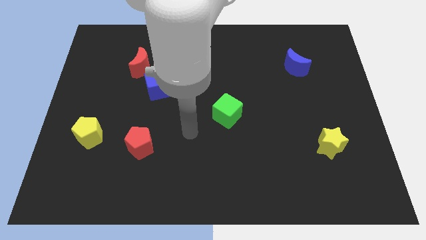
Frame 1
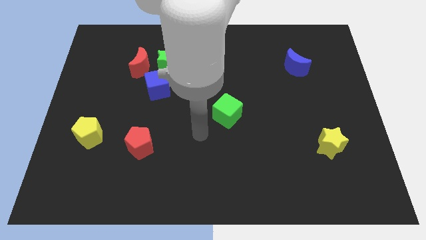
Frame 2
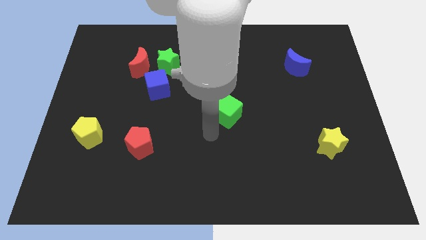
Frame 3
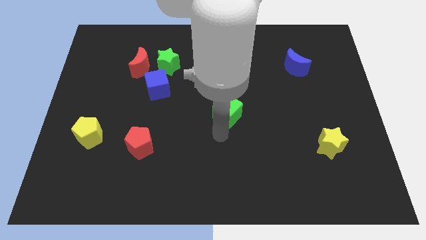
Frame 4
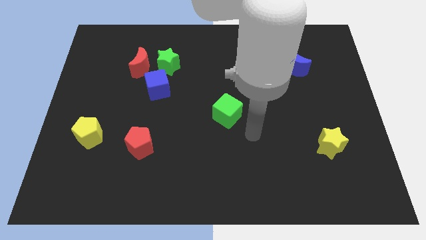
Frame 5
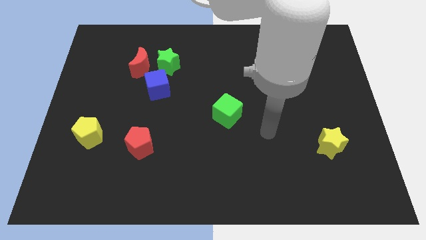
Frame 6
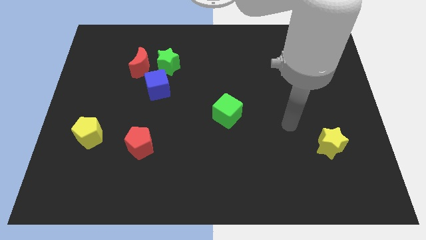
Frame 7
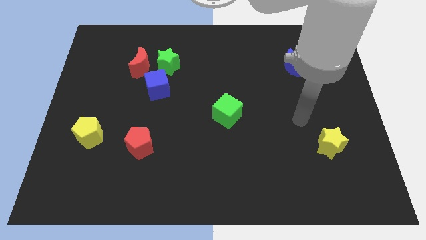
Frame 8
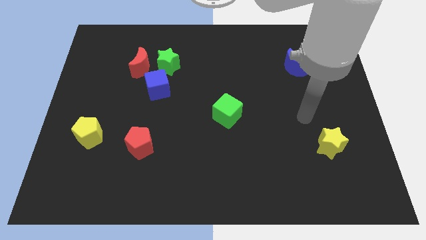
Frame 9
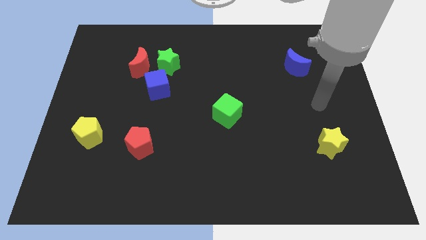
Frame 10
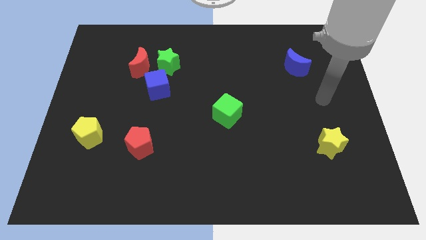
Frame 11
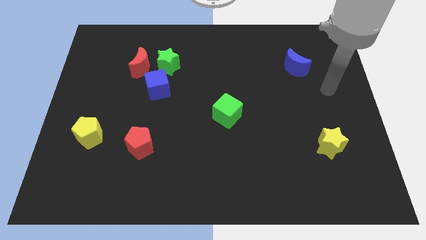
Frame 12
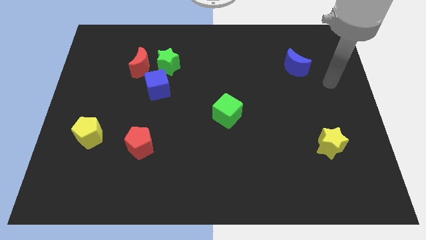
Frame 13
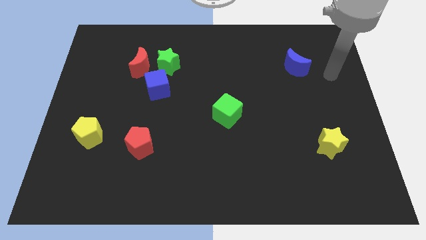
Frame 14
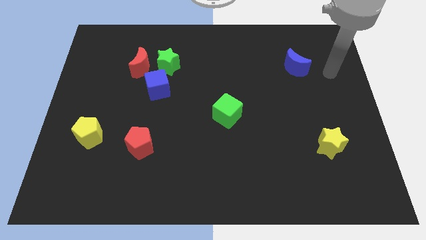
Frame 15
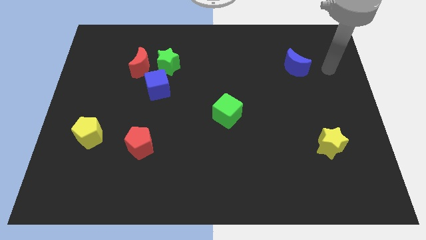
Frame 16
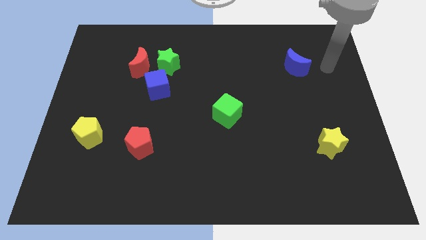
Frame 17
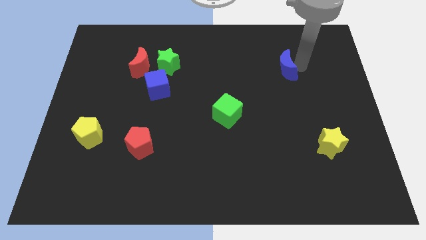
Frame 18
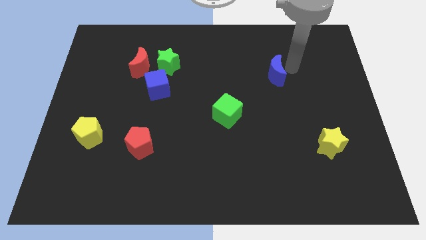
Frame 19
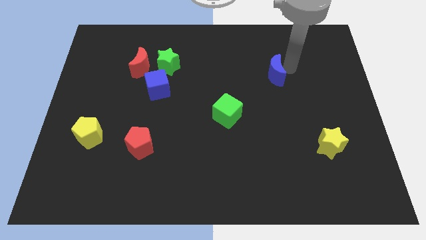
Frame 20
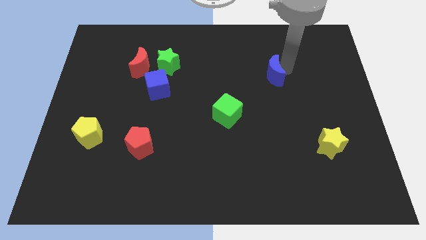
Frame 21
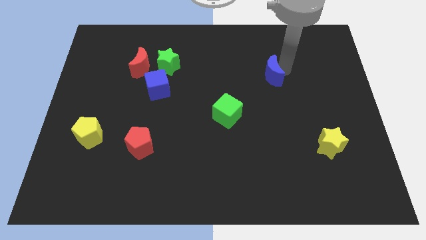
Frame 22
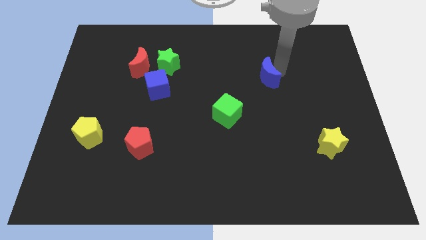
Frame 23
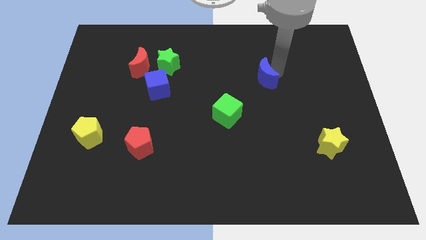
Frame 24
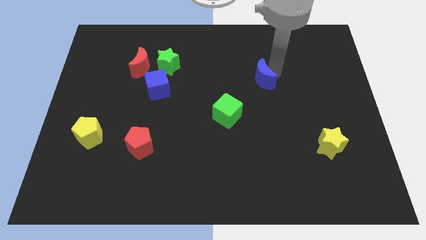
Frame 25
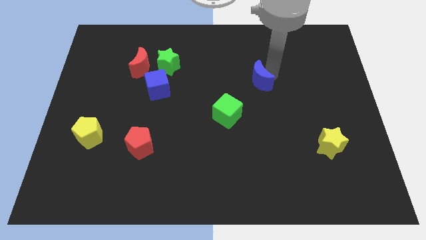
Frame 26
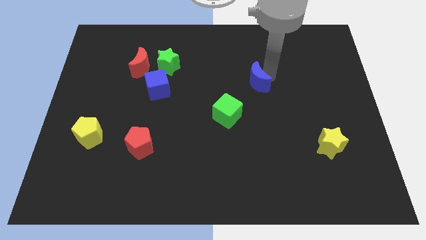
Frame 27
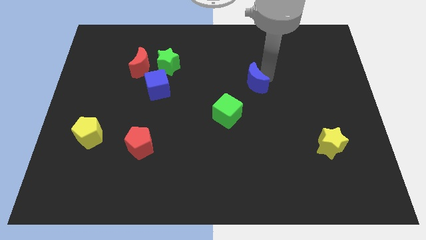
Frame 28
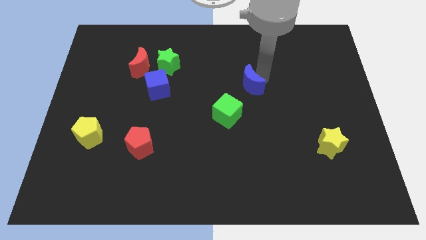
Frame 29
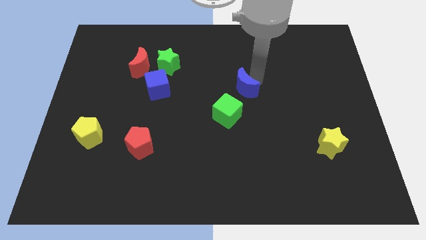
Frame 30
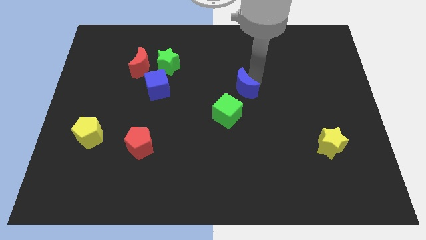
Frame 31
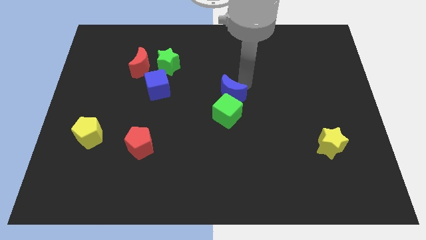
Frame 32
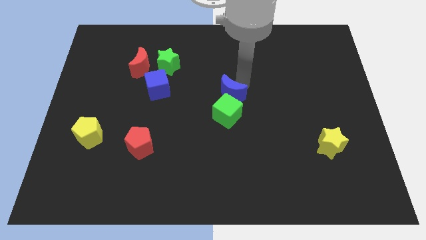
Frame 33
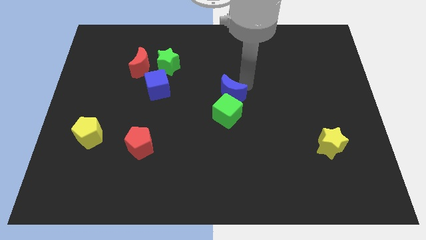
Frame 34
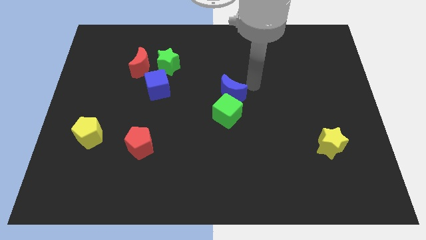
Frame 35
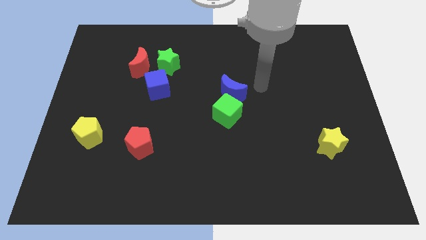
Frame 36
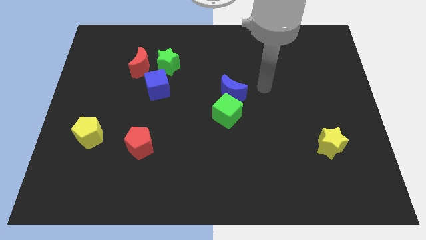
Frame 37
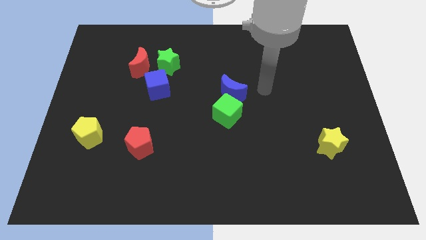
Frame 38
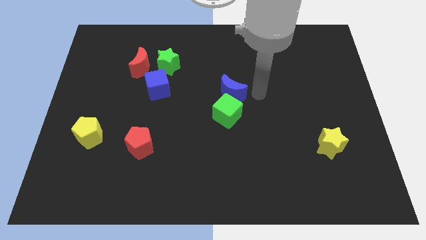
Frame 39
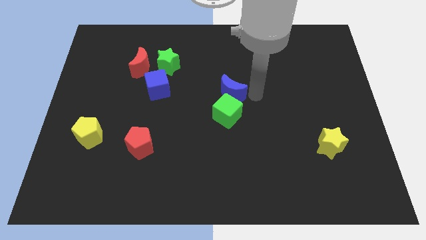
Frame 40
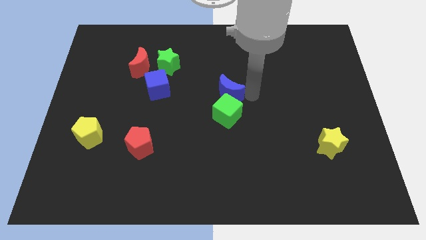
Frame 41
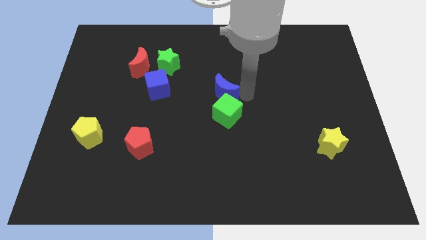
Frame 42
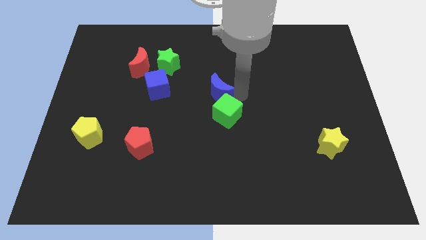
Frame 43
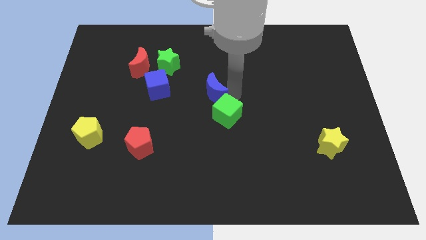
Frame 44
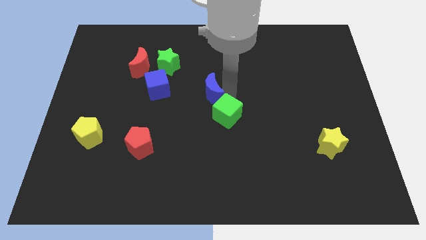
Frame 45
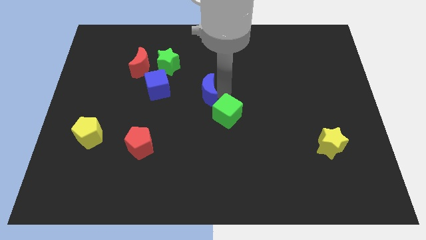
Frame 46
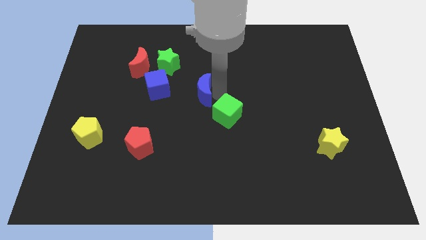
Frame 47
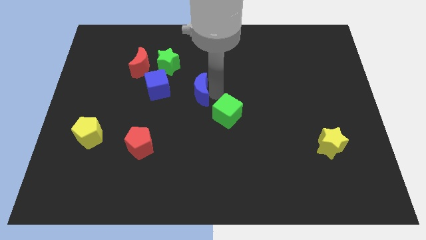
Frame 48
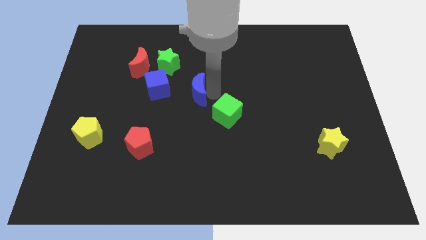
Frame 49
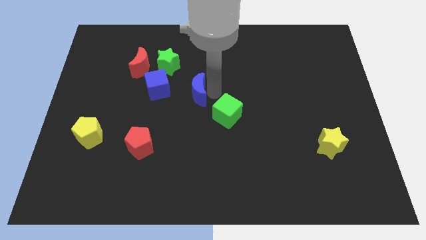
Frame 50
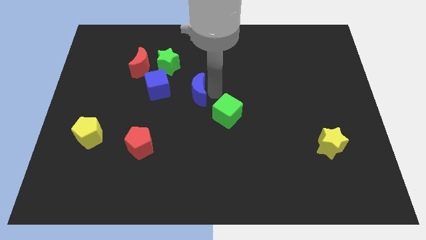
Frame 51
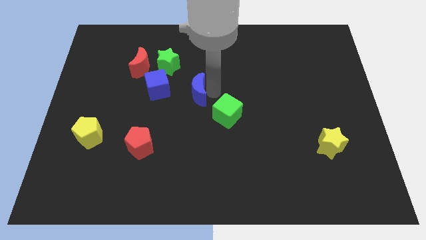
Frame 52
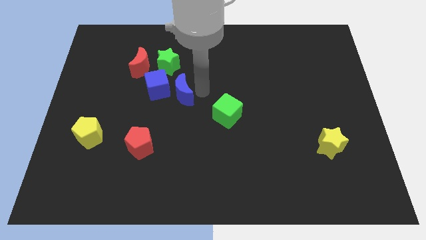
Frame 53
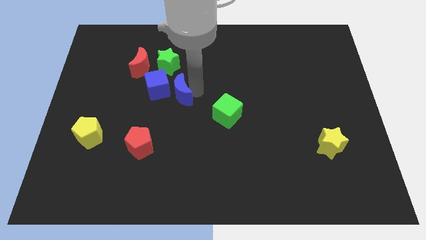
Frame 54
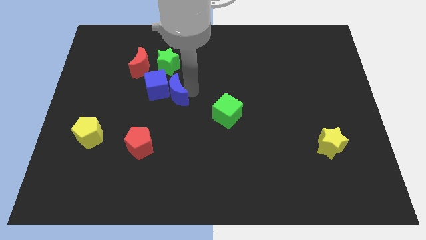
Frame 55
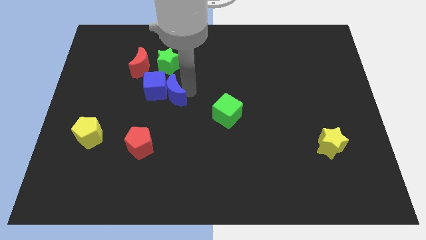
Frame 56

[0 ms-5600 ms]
put the blue moon to the blue cube

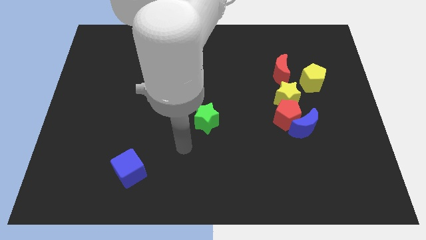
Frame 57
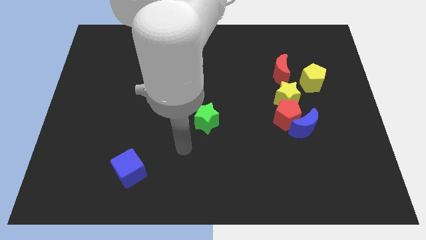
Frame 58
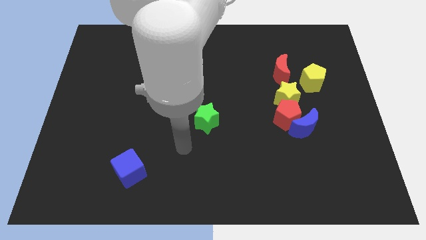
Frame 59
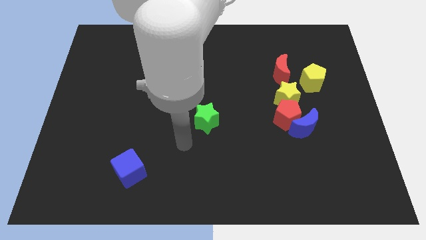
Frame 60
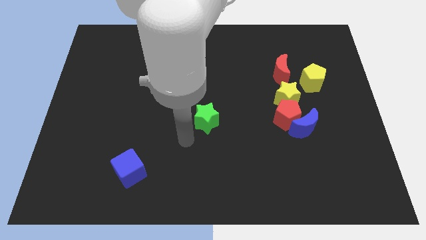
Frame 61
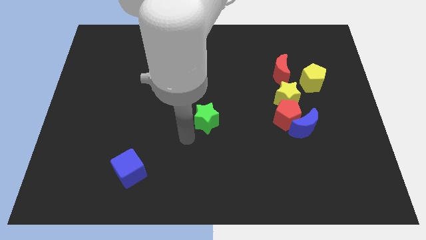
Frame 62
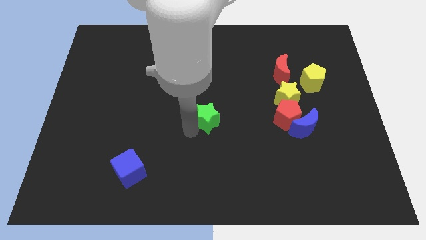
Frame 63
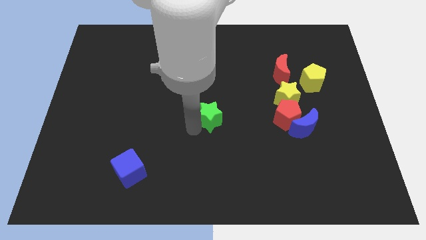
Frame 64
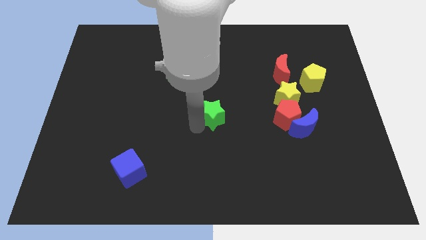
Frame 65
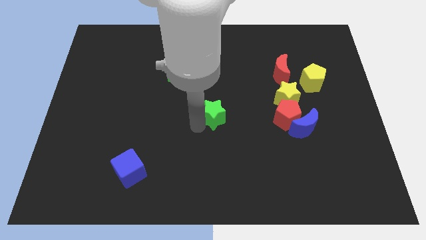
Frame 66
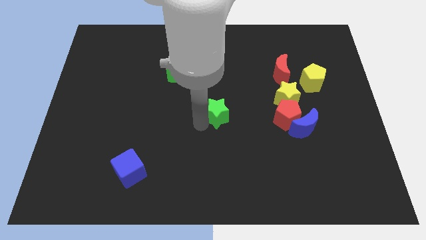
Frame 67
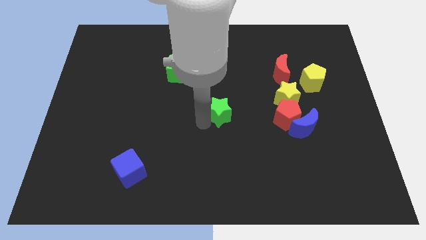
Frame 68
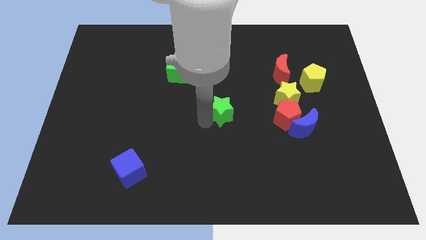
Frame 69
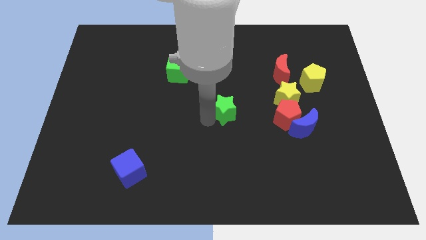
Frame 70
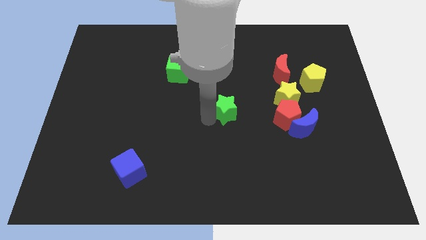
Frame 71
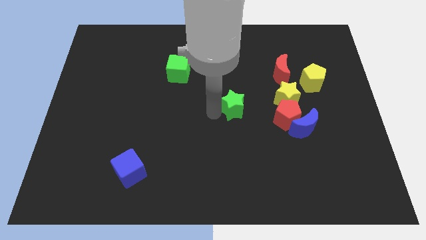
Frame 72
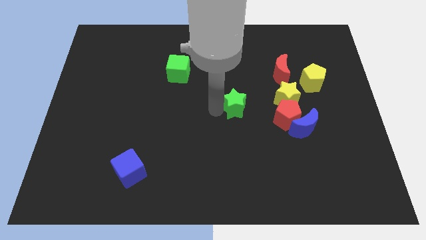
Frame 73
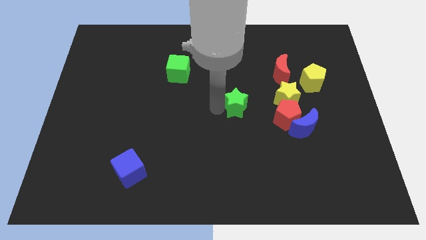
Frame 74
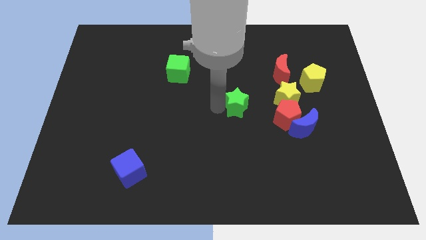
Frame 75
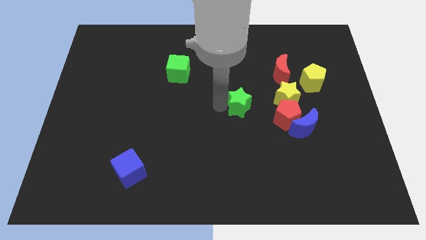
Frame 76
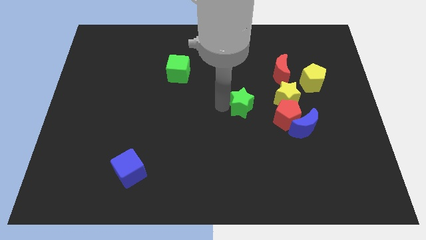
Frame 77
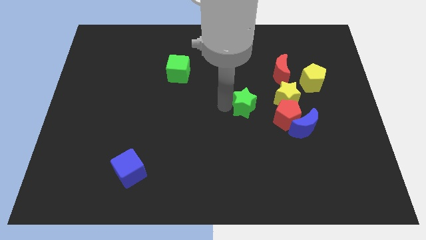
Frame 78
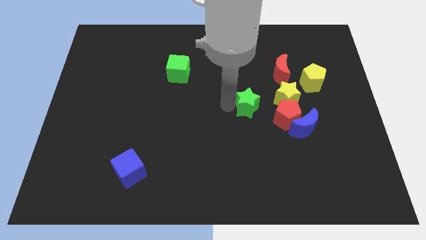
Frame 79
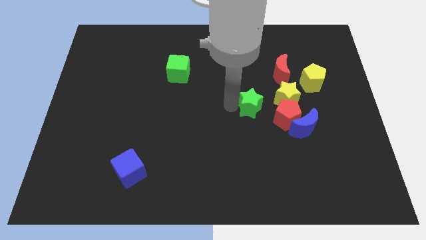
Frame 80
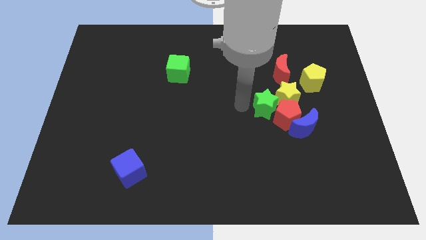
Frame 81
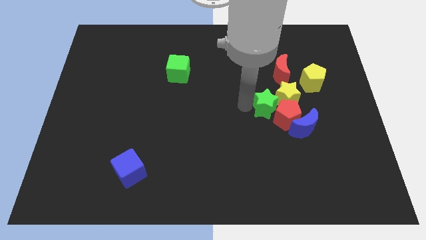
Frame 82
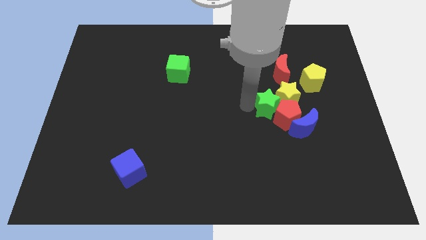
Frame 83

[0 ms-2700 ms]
move the green star next to the red pentagon

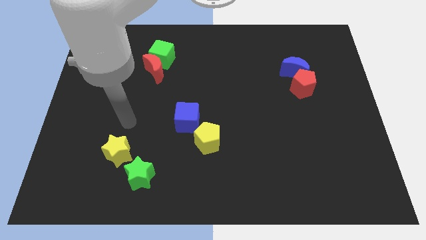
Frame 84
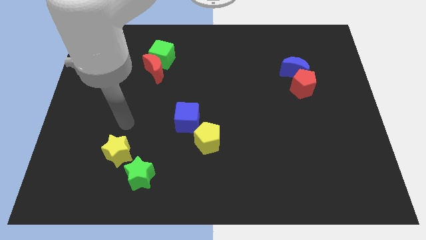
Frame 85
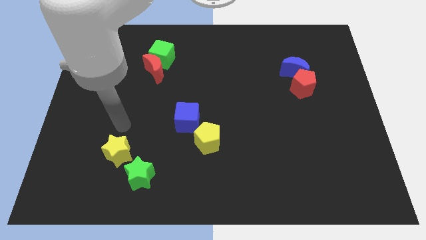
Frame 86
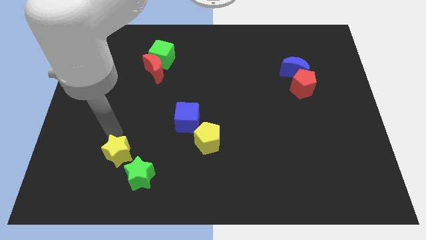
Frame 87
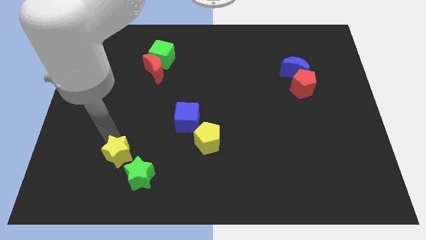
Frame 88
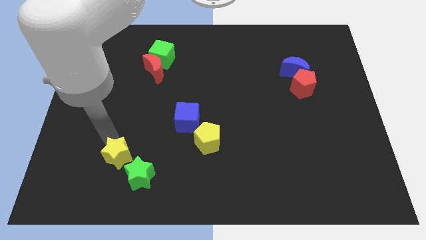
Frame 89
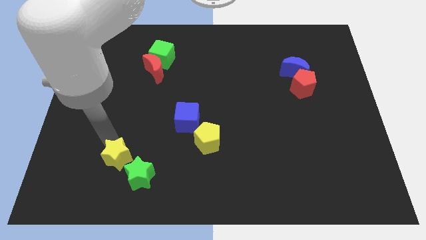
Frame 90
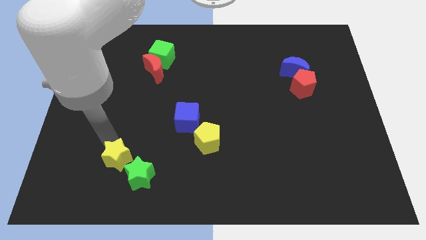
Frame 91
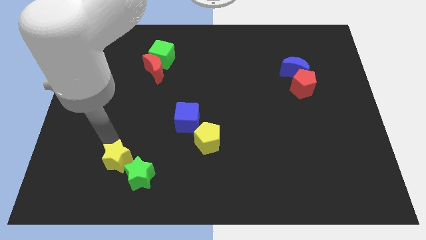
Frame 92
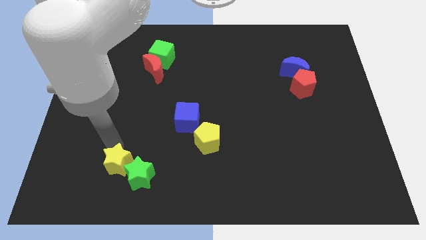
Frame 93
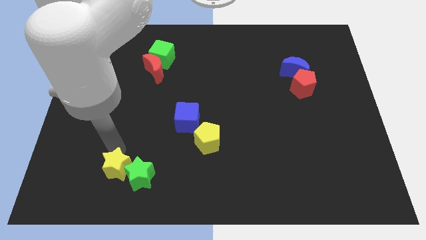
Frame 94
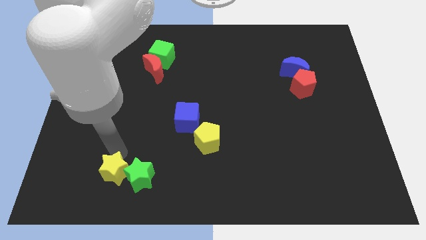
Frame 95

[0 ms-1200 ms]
slide the yellow star close to the green star
